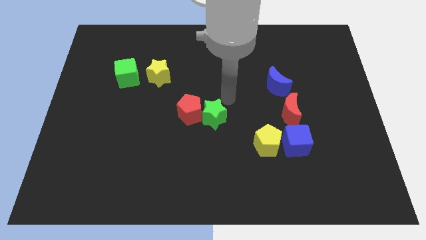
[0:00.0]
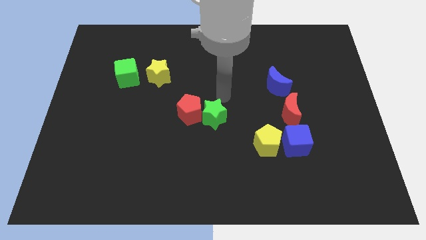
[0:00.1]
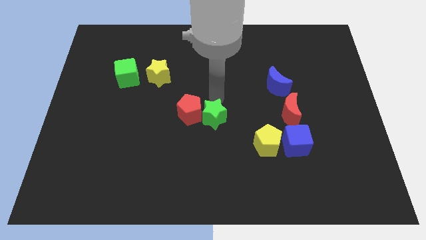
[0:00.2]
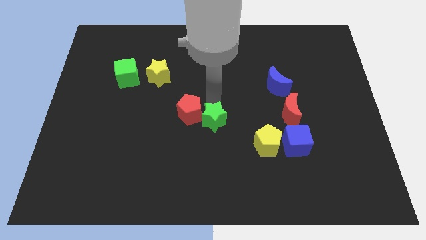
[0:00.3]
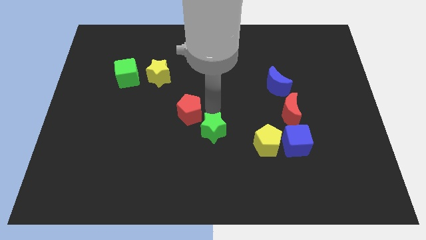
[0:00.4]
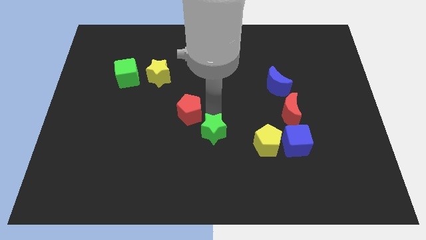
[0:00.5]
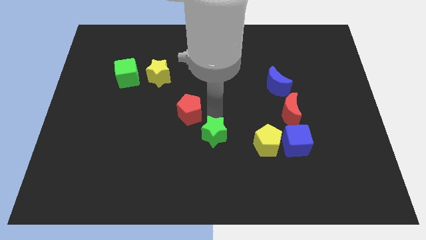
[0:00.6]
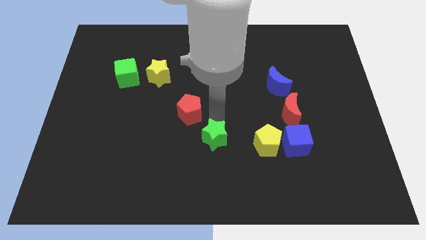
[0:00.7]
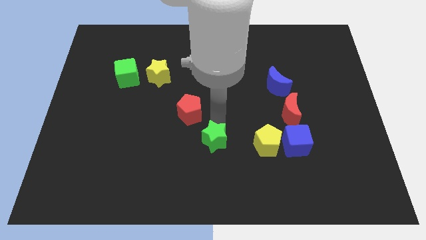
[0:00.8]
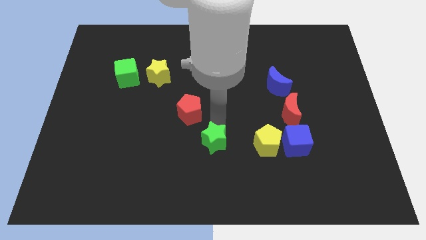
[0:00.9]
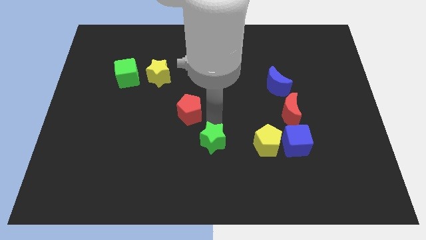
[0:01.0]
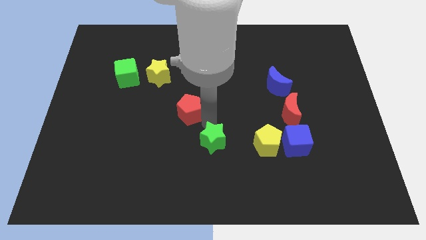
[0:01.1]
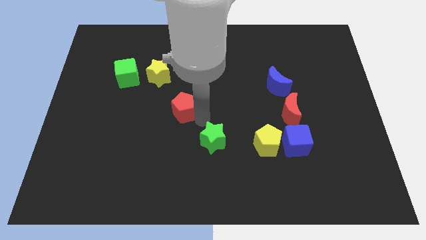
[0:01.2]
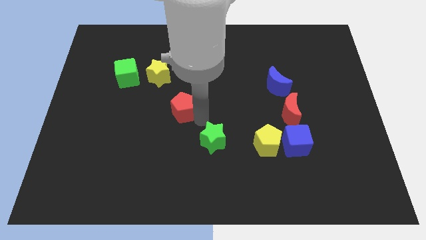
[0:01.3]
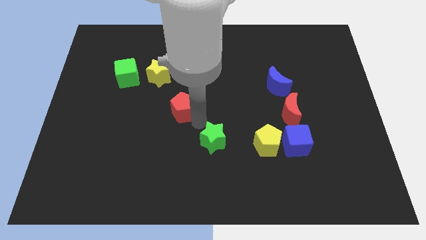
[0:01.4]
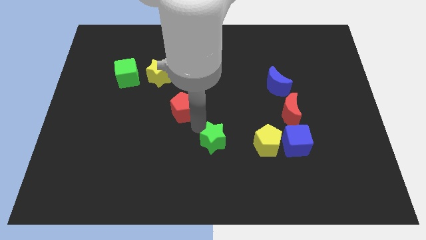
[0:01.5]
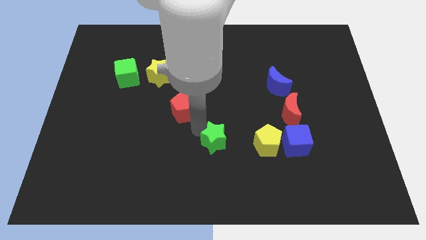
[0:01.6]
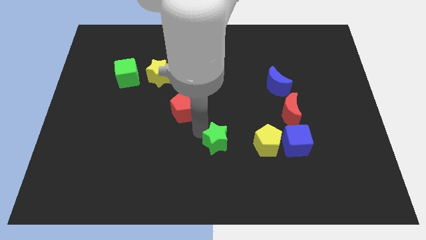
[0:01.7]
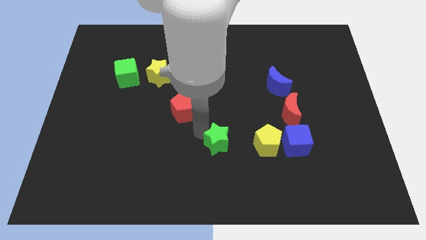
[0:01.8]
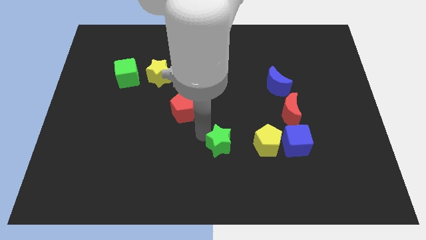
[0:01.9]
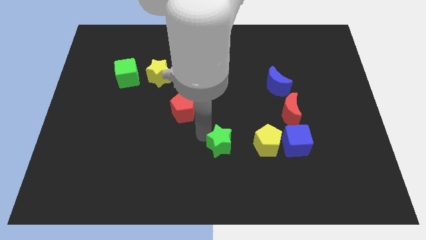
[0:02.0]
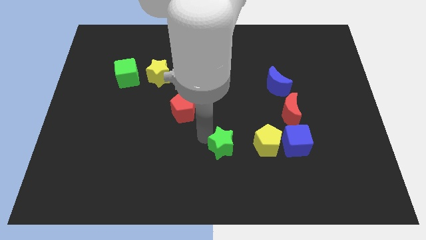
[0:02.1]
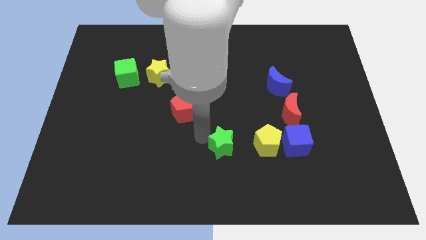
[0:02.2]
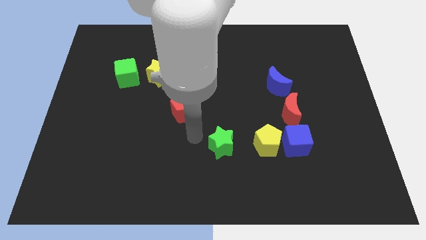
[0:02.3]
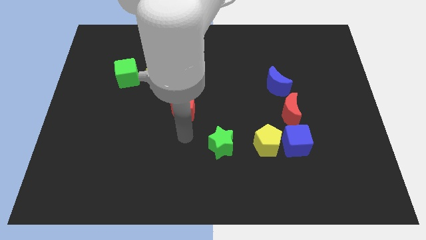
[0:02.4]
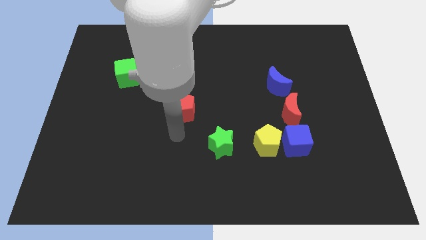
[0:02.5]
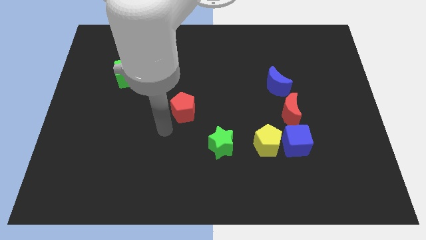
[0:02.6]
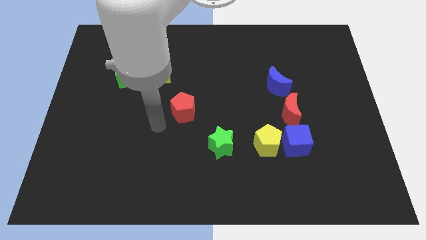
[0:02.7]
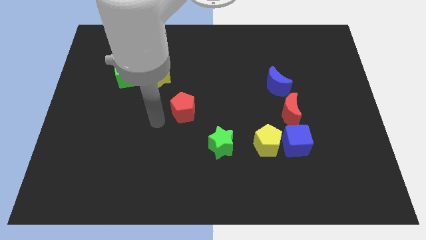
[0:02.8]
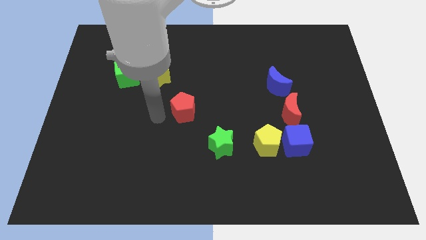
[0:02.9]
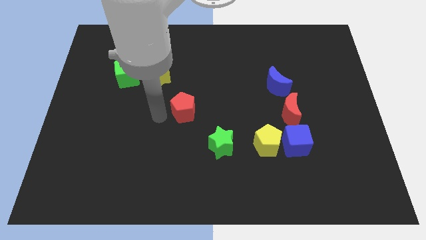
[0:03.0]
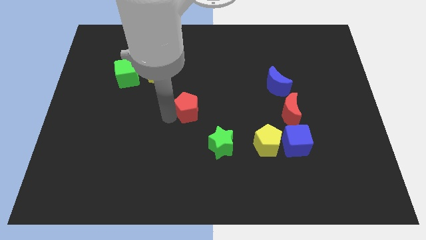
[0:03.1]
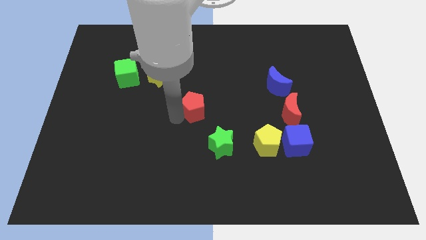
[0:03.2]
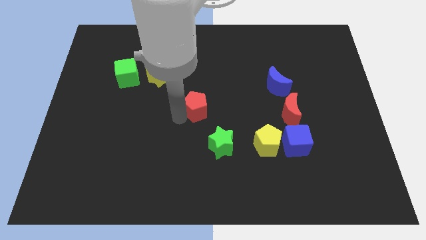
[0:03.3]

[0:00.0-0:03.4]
slightly move the green star downwards

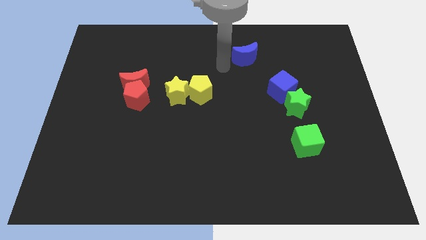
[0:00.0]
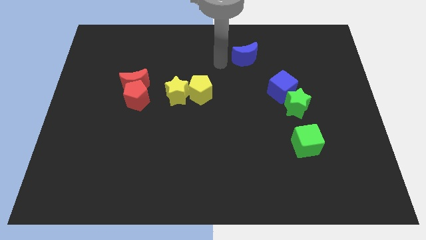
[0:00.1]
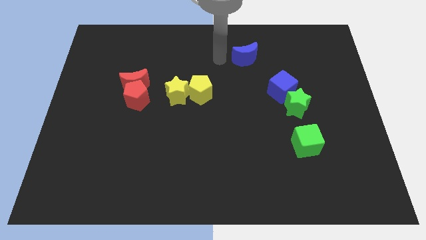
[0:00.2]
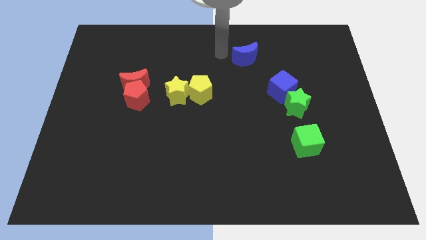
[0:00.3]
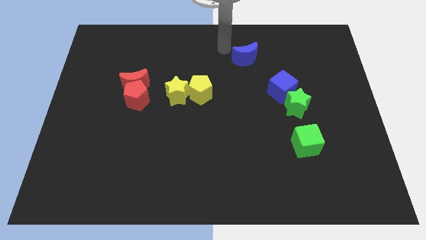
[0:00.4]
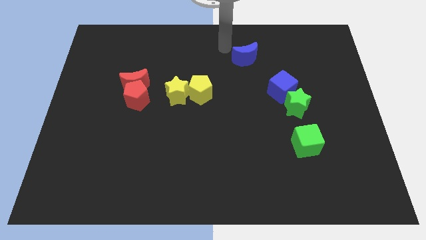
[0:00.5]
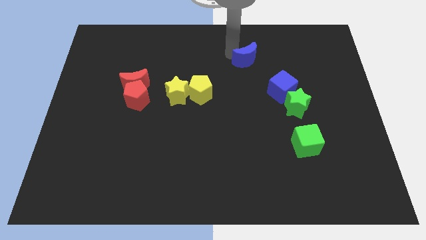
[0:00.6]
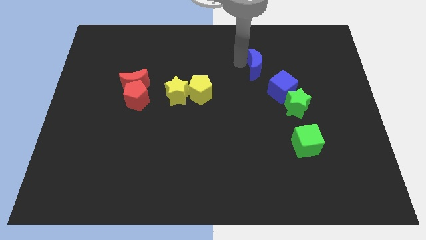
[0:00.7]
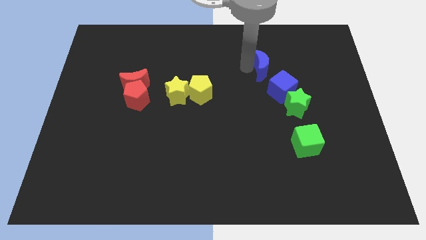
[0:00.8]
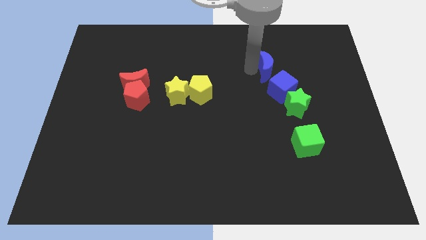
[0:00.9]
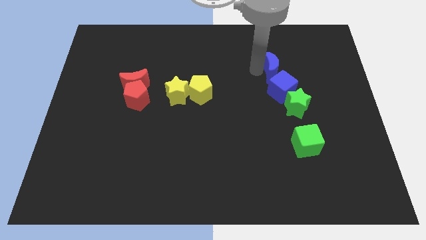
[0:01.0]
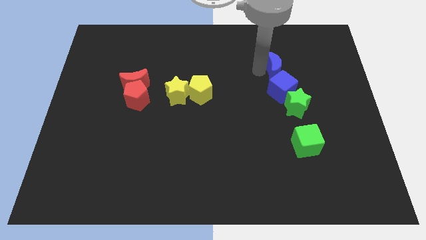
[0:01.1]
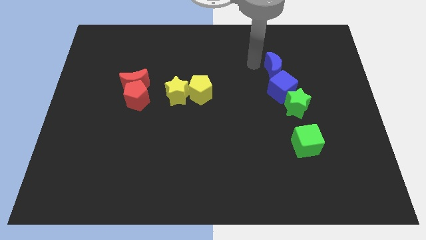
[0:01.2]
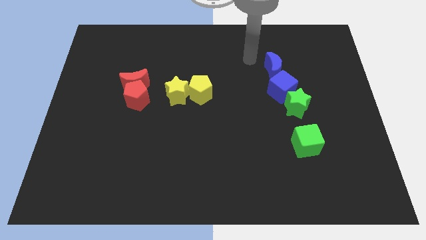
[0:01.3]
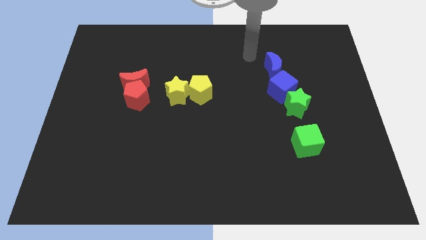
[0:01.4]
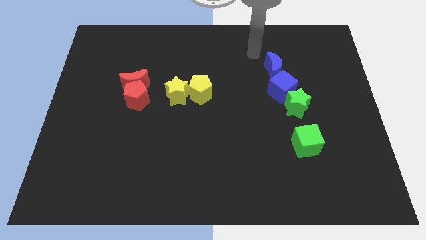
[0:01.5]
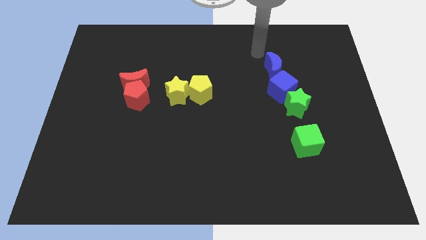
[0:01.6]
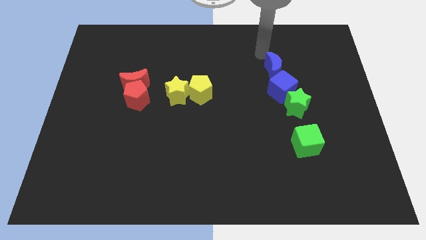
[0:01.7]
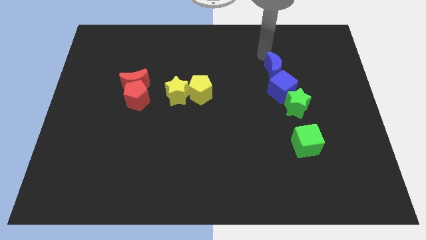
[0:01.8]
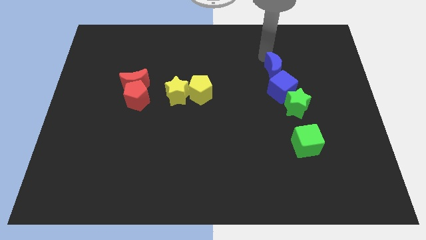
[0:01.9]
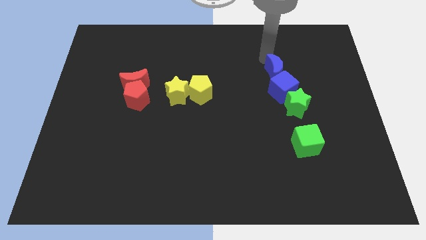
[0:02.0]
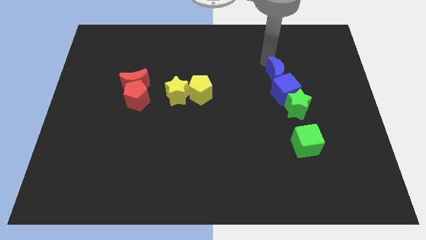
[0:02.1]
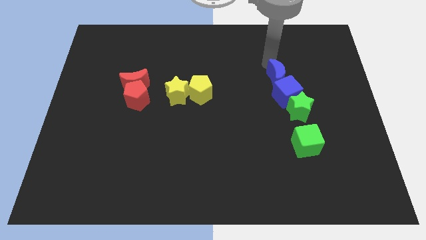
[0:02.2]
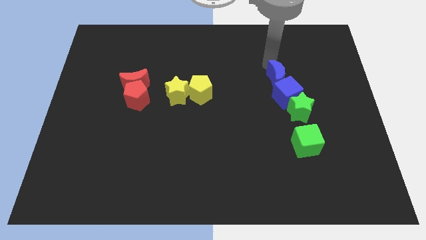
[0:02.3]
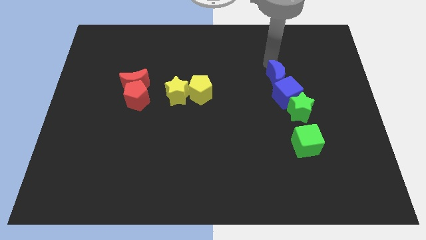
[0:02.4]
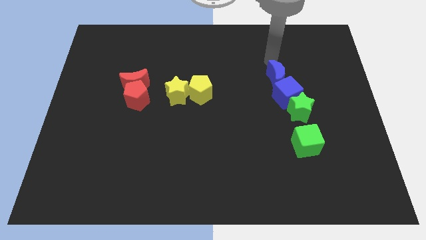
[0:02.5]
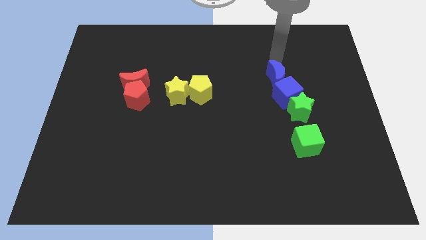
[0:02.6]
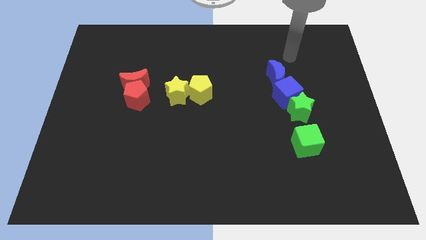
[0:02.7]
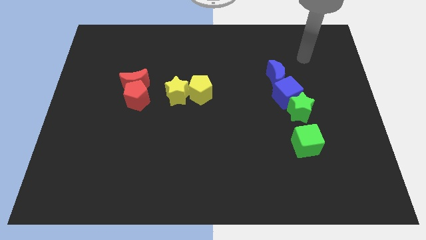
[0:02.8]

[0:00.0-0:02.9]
move the blue moon close to the blue cube

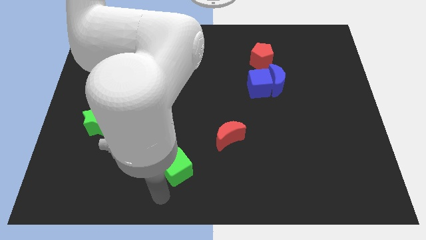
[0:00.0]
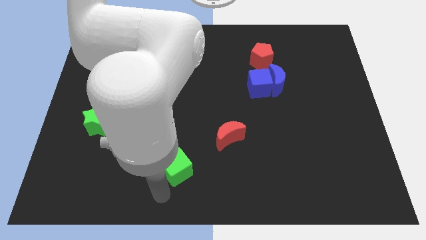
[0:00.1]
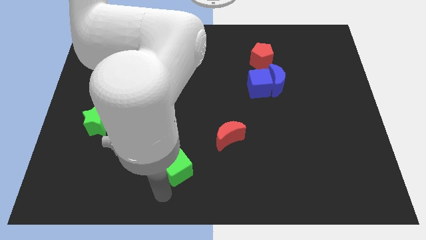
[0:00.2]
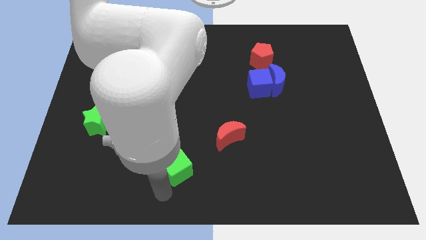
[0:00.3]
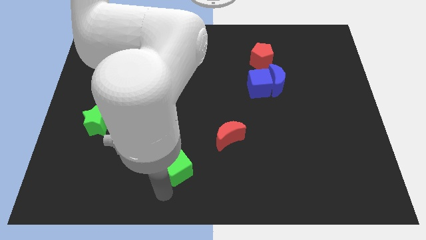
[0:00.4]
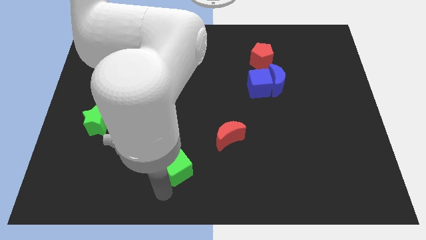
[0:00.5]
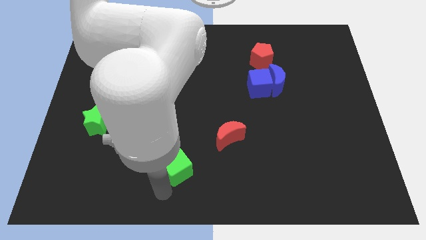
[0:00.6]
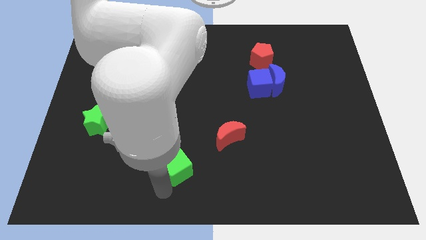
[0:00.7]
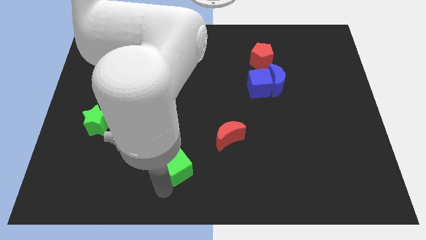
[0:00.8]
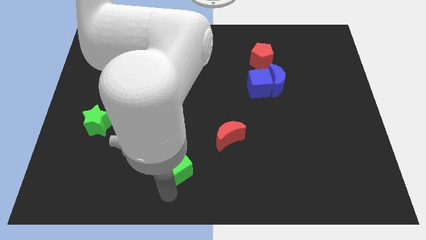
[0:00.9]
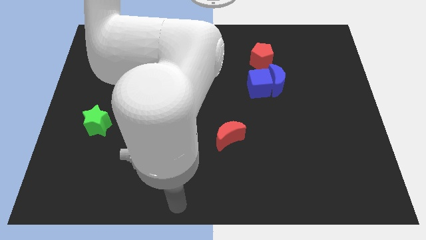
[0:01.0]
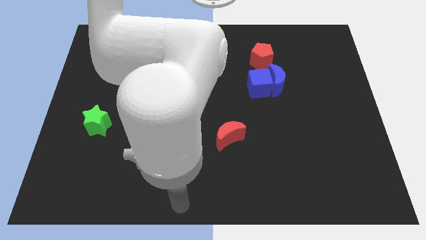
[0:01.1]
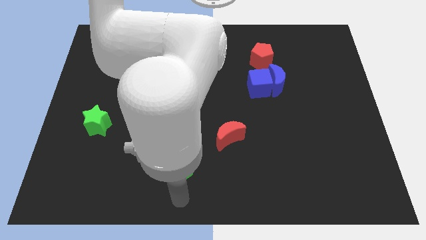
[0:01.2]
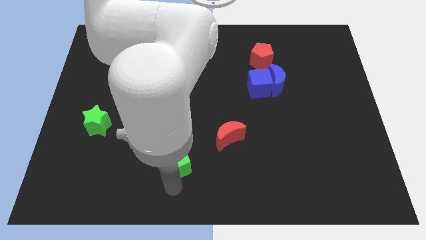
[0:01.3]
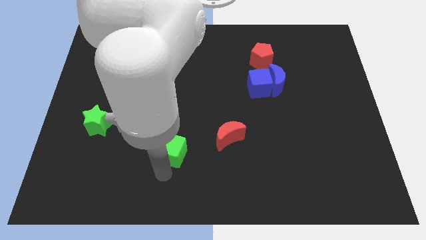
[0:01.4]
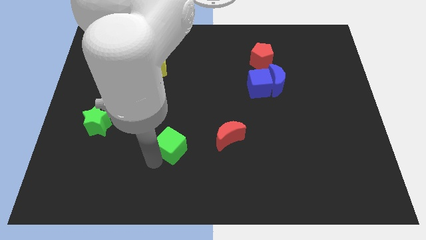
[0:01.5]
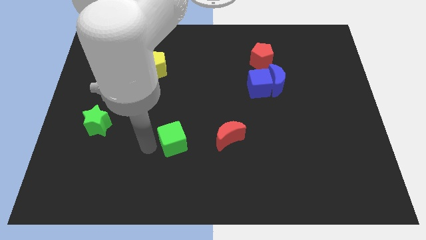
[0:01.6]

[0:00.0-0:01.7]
place green cube to the left side of the red moon

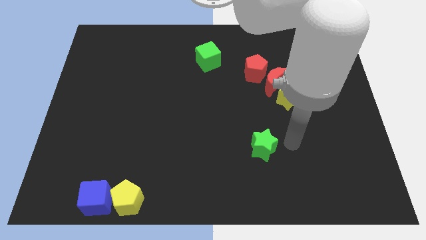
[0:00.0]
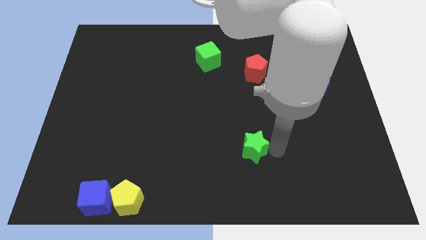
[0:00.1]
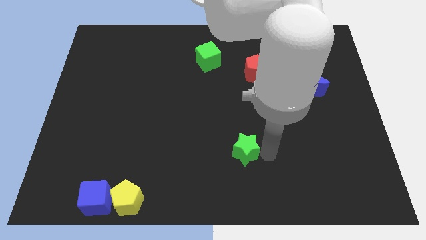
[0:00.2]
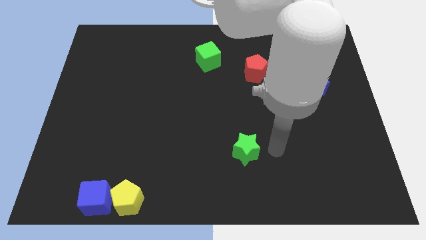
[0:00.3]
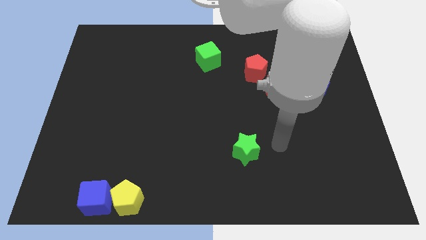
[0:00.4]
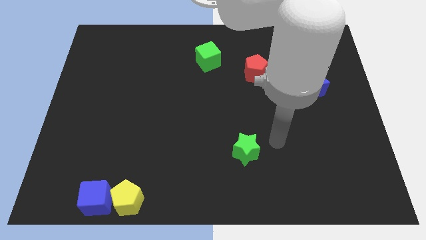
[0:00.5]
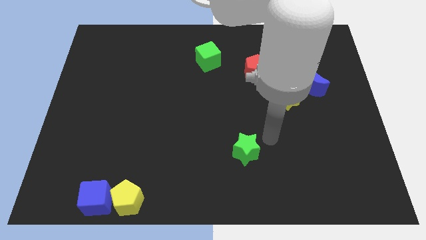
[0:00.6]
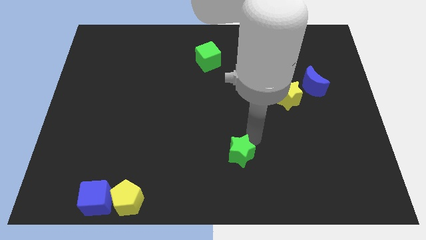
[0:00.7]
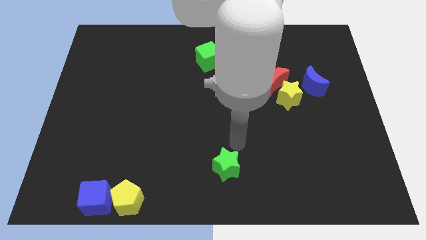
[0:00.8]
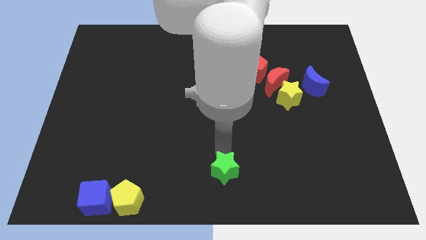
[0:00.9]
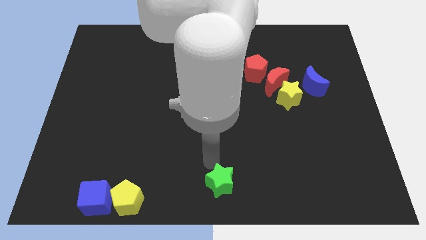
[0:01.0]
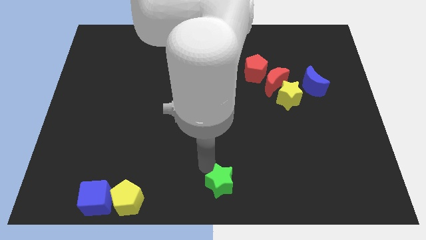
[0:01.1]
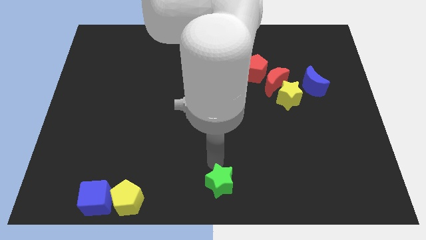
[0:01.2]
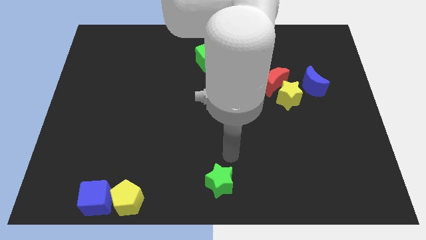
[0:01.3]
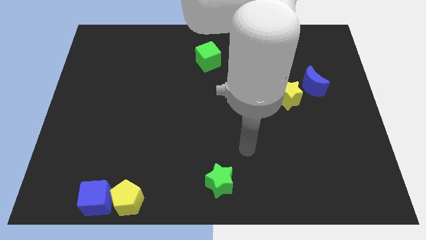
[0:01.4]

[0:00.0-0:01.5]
push the green star to the bottom center of the board
